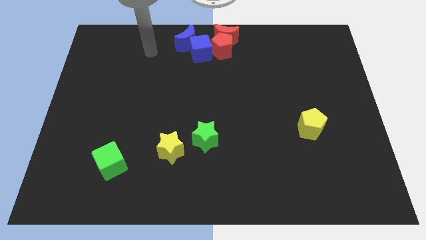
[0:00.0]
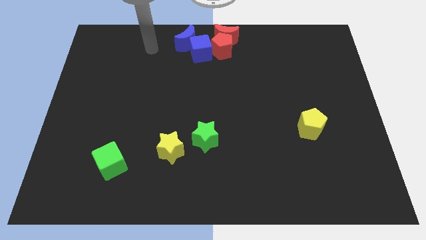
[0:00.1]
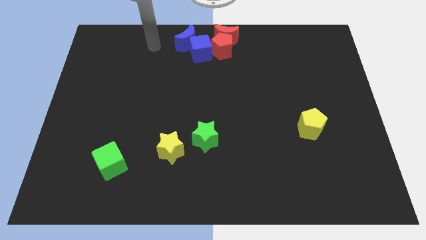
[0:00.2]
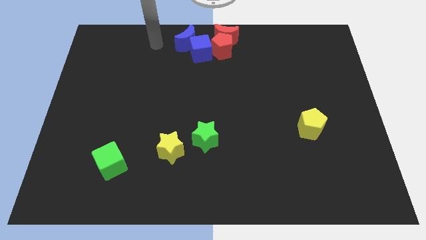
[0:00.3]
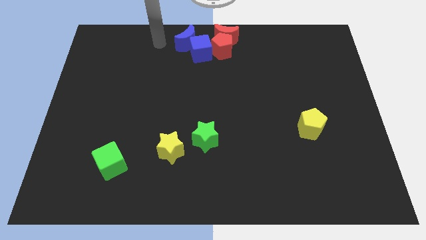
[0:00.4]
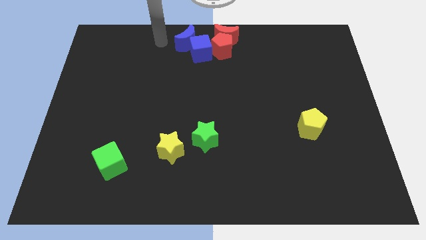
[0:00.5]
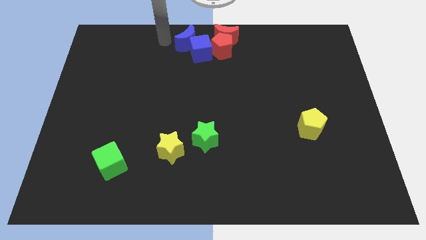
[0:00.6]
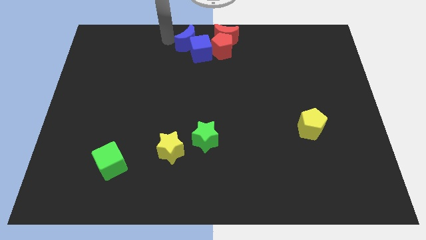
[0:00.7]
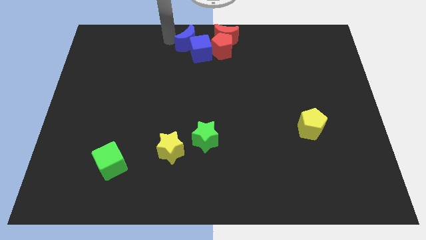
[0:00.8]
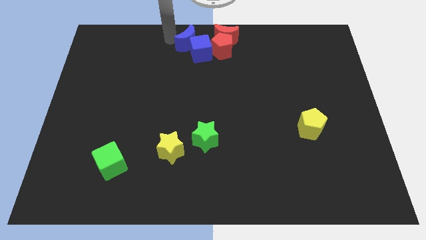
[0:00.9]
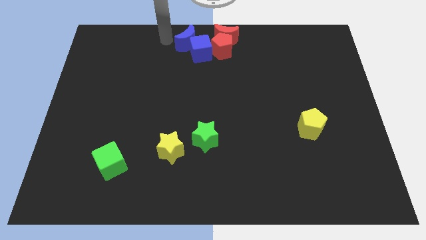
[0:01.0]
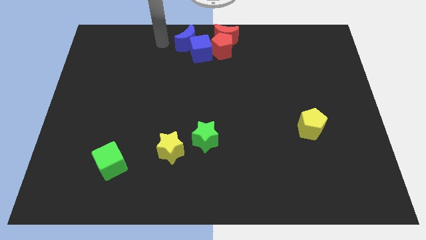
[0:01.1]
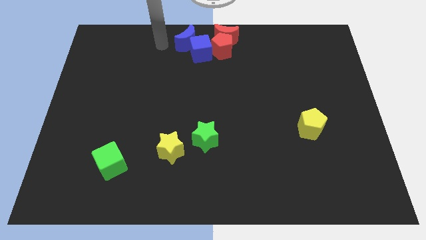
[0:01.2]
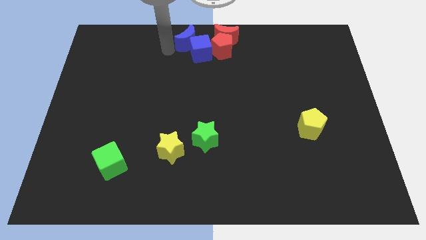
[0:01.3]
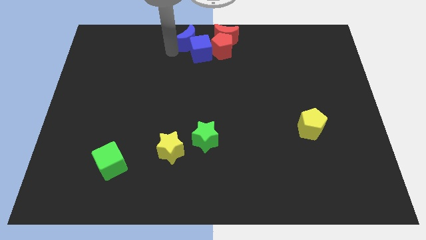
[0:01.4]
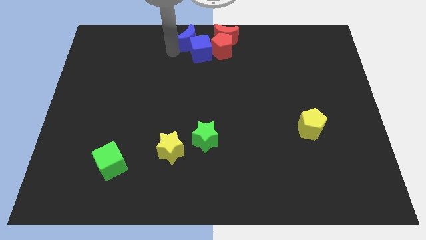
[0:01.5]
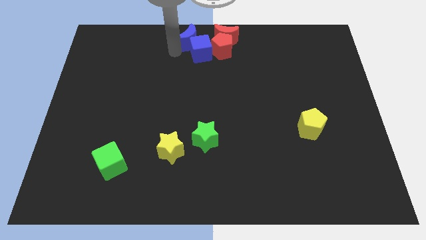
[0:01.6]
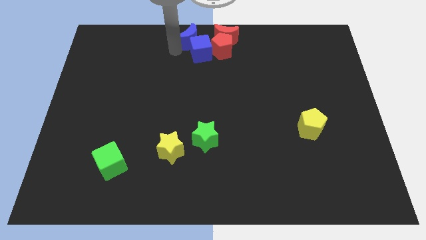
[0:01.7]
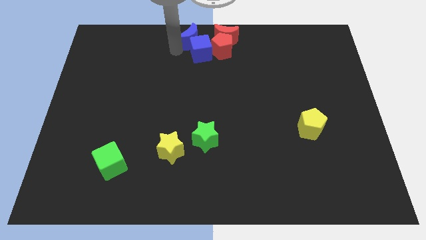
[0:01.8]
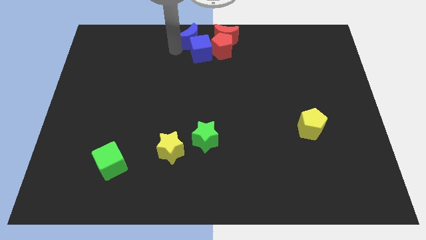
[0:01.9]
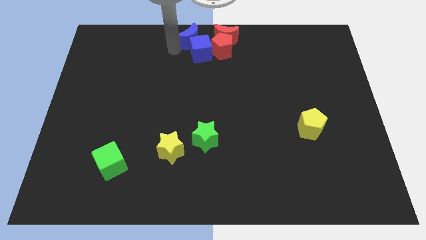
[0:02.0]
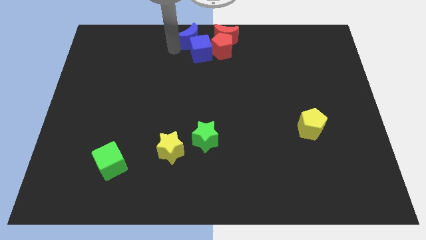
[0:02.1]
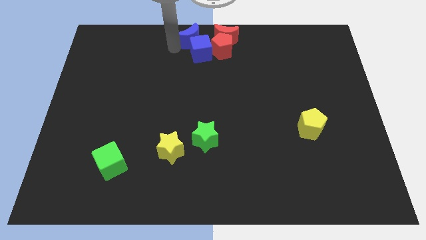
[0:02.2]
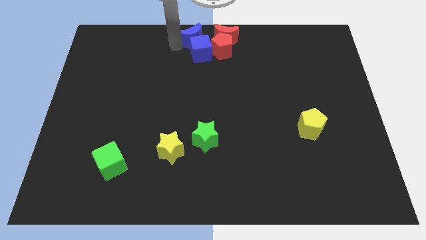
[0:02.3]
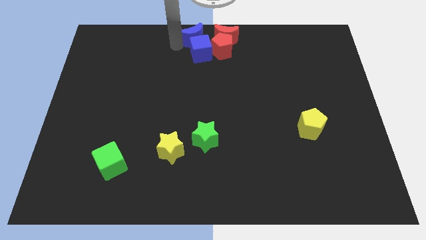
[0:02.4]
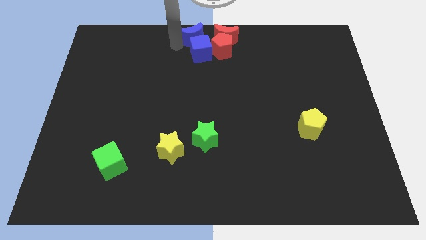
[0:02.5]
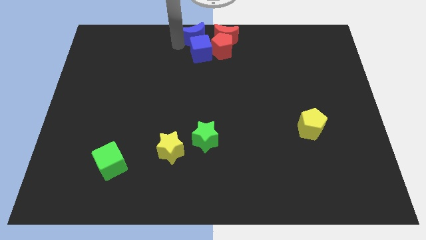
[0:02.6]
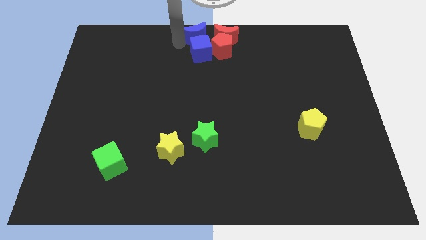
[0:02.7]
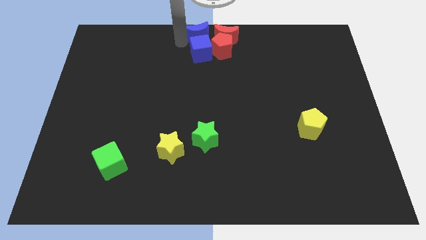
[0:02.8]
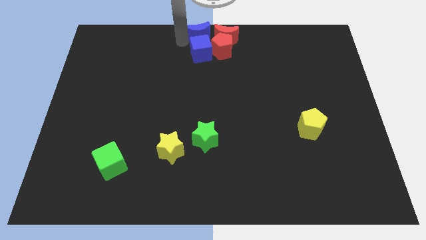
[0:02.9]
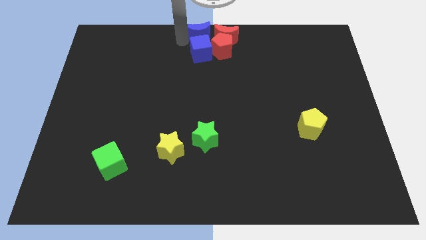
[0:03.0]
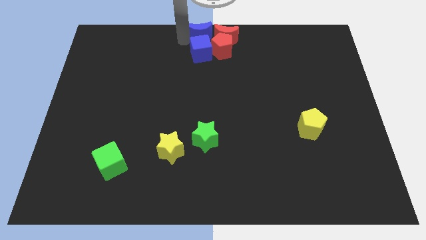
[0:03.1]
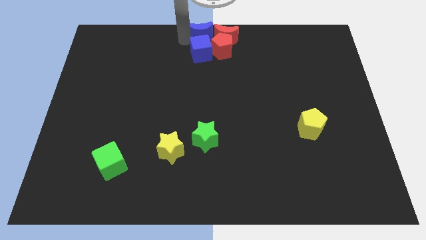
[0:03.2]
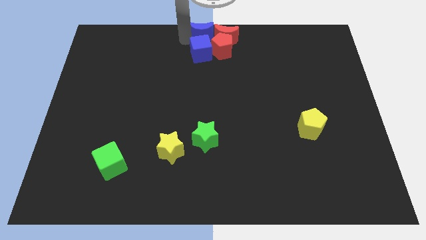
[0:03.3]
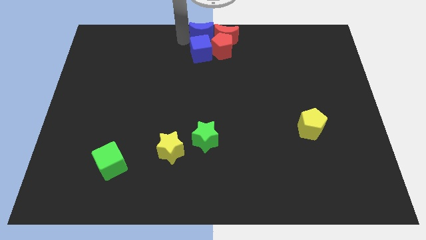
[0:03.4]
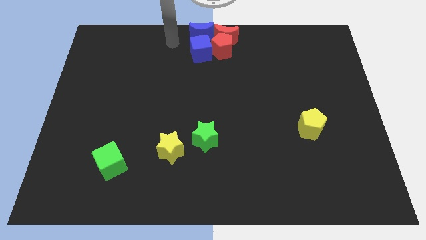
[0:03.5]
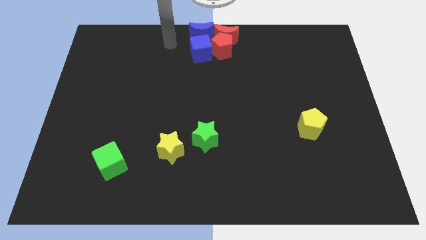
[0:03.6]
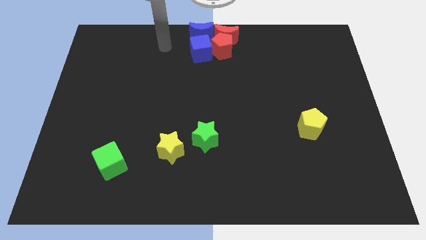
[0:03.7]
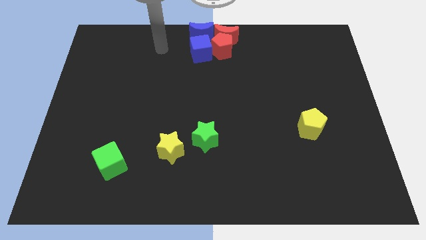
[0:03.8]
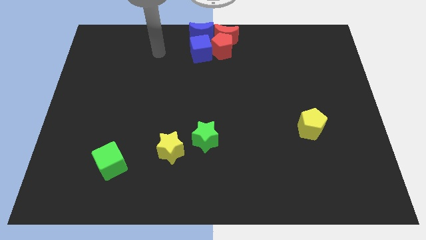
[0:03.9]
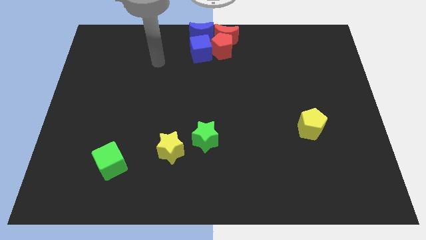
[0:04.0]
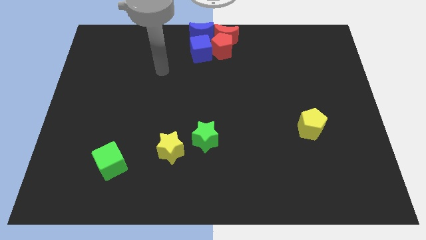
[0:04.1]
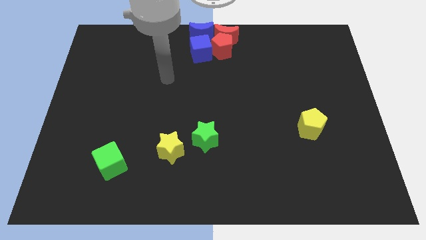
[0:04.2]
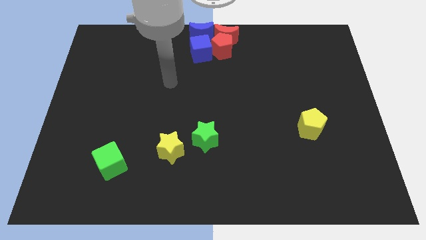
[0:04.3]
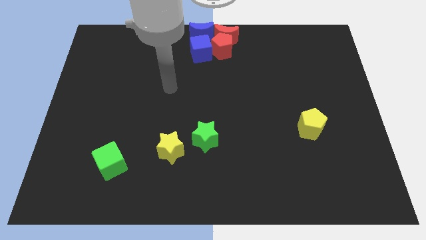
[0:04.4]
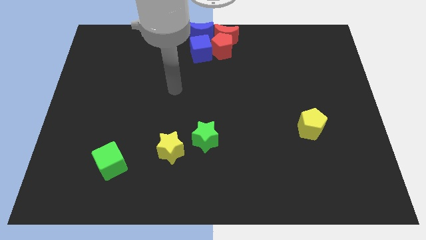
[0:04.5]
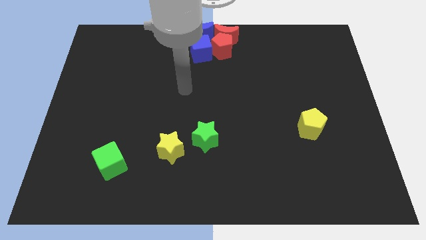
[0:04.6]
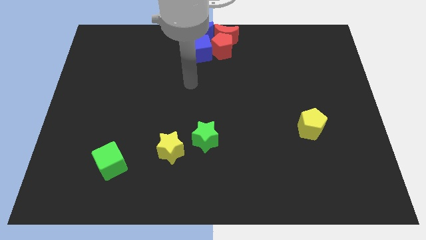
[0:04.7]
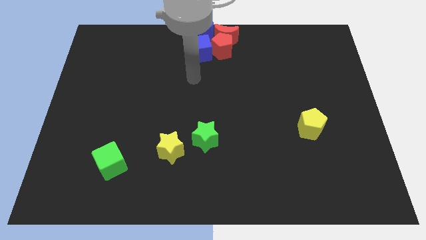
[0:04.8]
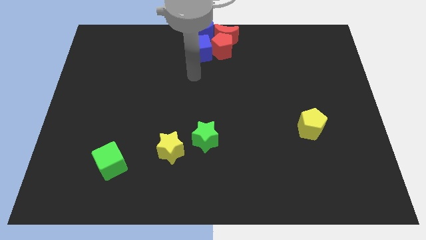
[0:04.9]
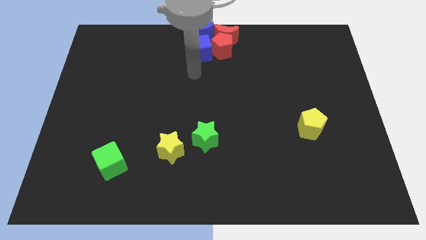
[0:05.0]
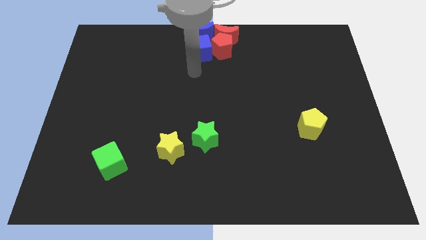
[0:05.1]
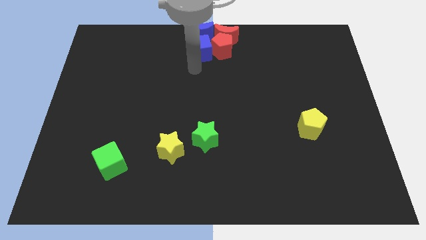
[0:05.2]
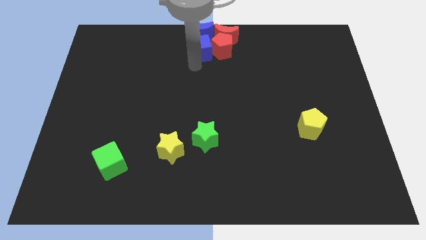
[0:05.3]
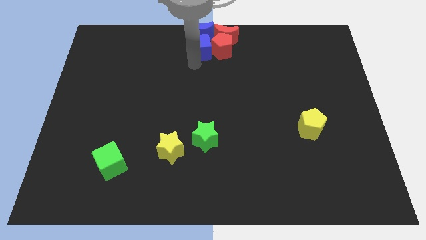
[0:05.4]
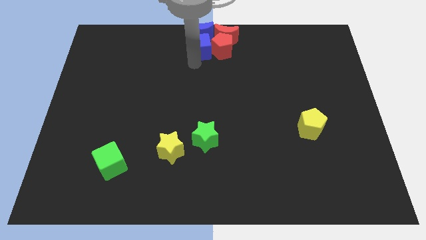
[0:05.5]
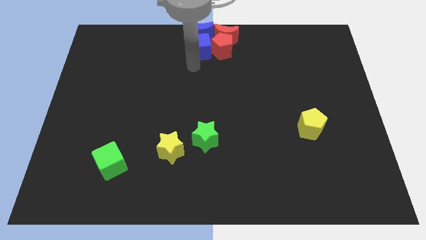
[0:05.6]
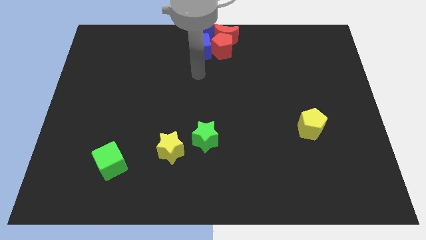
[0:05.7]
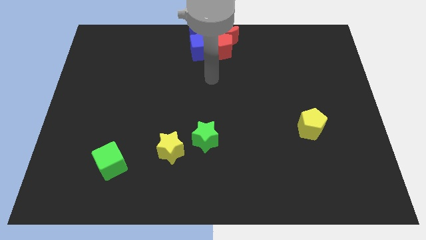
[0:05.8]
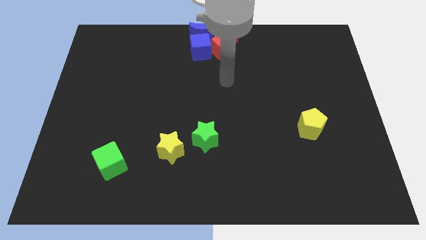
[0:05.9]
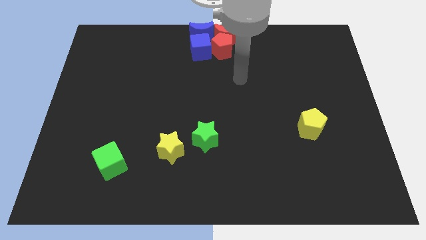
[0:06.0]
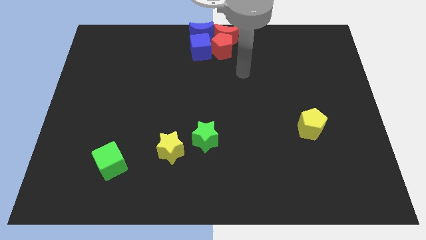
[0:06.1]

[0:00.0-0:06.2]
move the red and blue blocks at the top center of the board

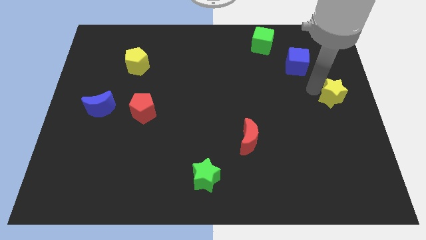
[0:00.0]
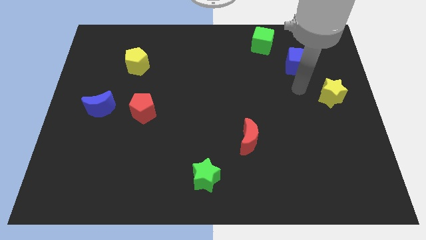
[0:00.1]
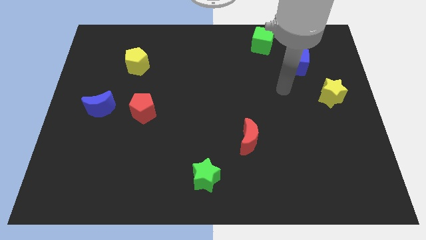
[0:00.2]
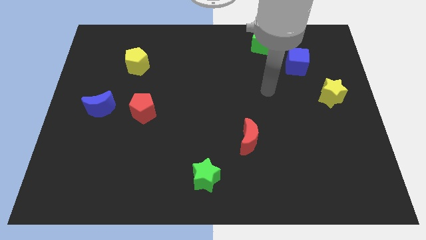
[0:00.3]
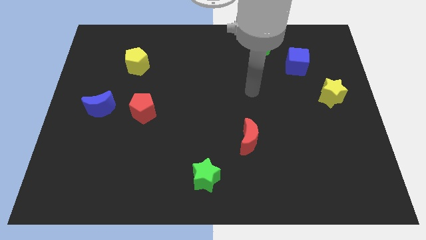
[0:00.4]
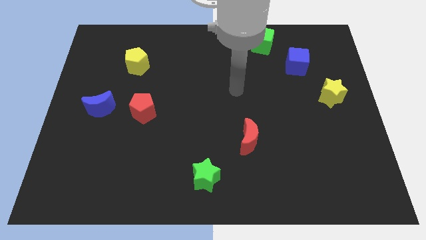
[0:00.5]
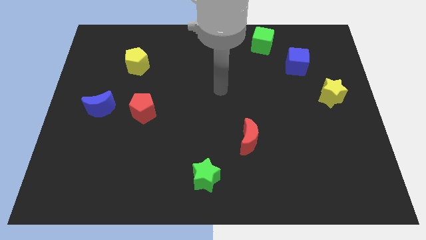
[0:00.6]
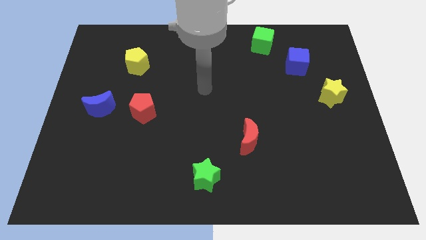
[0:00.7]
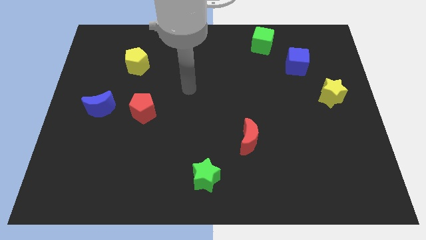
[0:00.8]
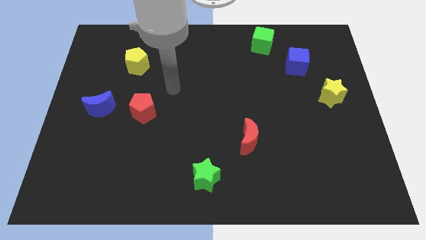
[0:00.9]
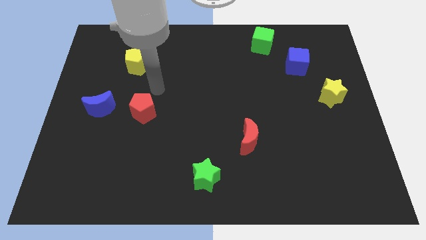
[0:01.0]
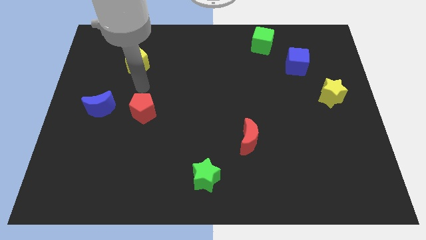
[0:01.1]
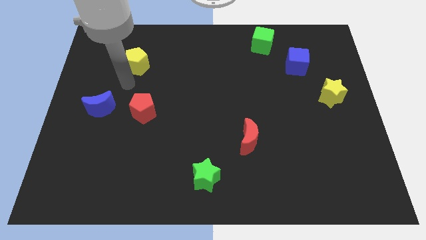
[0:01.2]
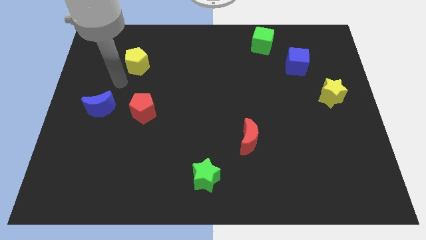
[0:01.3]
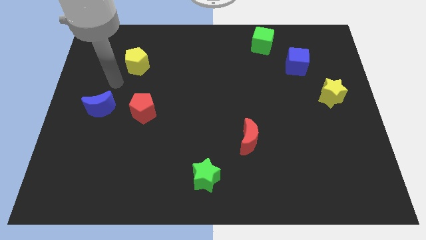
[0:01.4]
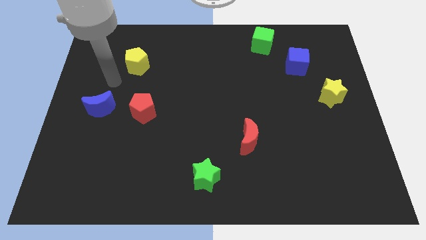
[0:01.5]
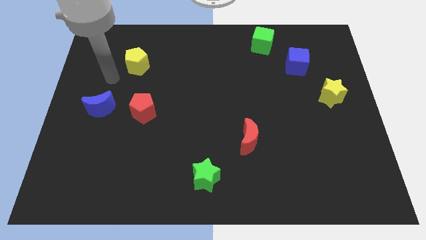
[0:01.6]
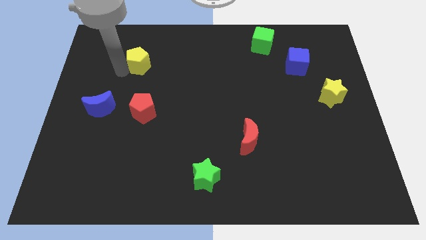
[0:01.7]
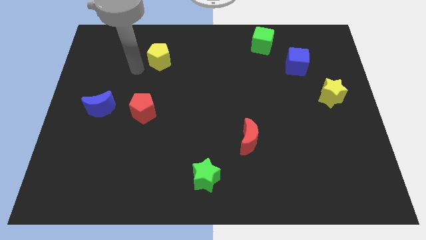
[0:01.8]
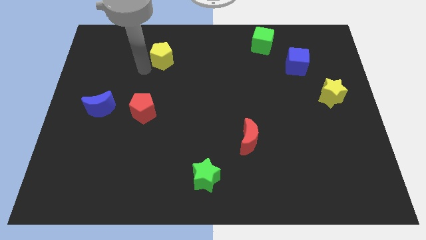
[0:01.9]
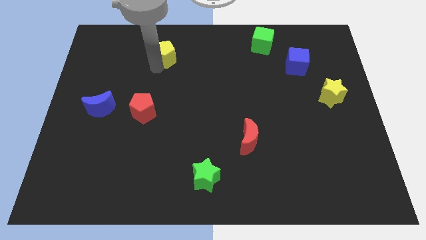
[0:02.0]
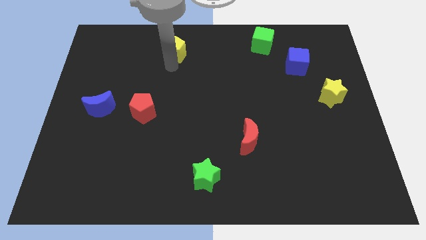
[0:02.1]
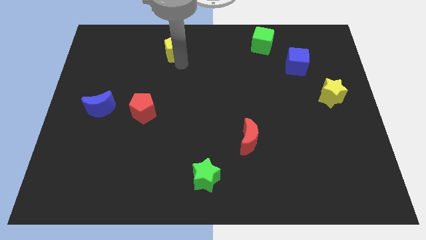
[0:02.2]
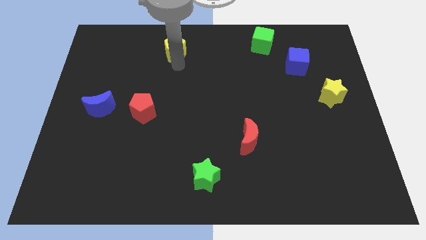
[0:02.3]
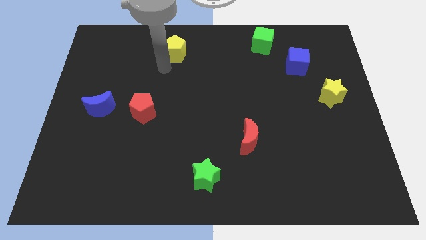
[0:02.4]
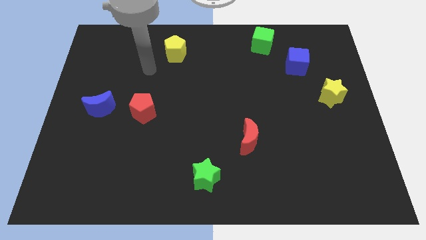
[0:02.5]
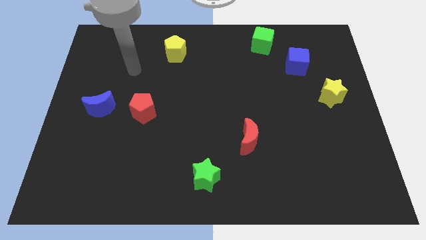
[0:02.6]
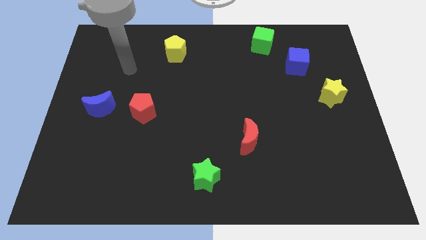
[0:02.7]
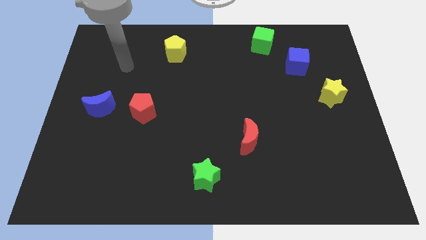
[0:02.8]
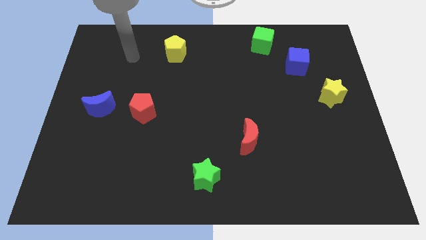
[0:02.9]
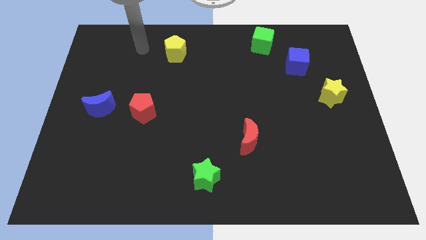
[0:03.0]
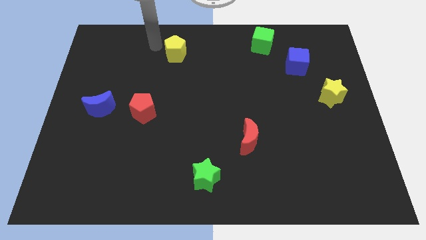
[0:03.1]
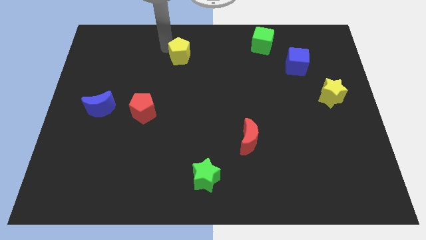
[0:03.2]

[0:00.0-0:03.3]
slightly move the yellow pentagon to the top of the board
